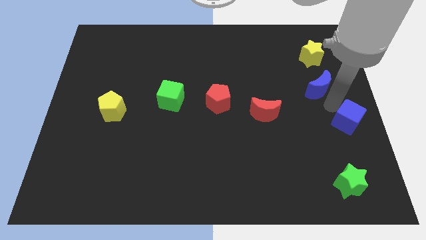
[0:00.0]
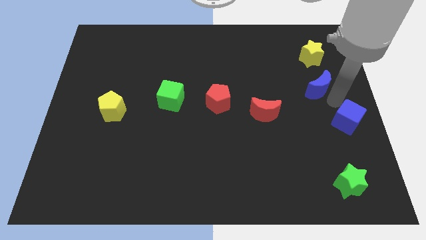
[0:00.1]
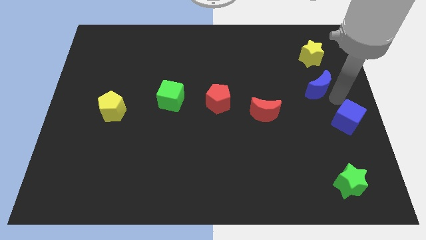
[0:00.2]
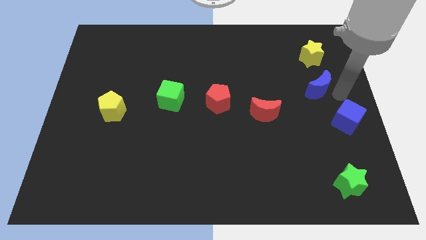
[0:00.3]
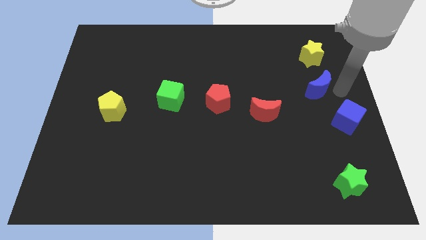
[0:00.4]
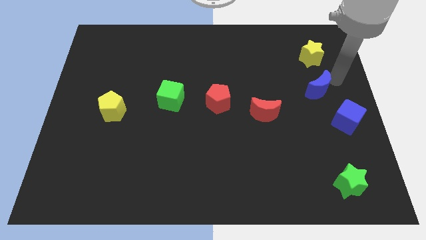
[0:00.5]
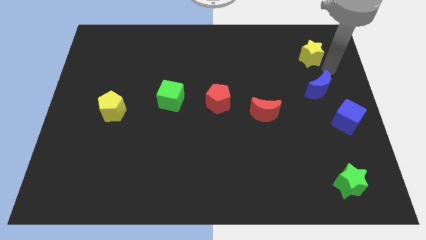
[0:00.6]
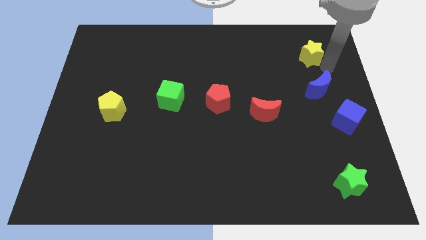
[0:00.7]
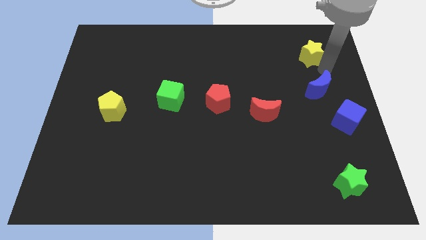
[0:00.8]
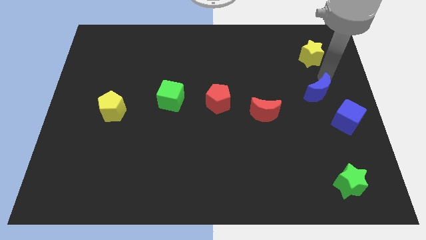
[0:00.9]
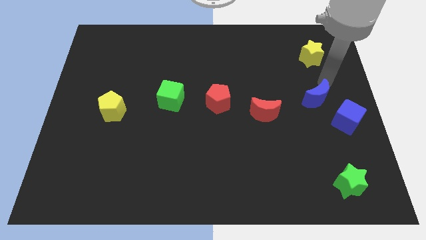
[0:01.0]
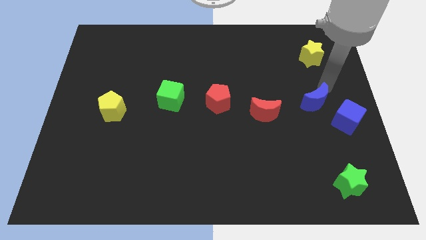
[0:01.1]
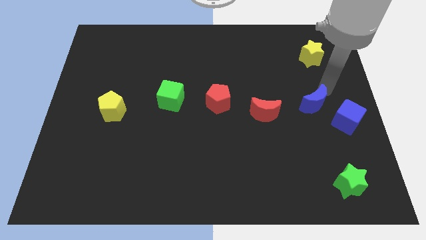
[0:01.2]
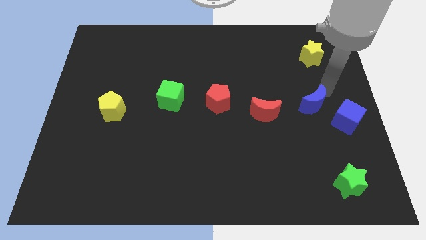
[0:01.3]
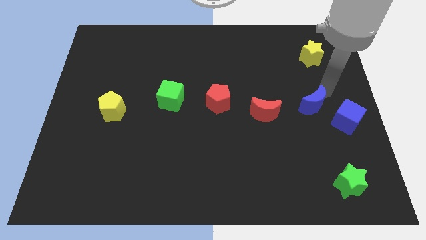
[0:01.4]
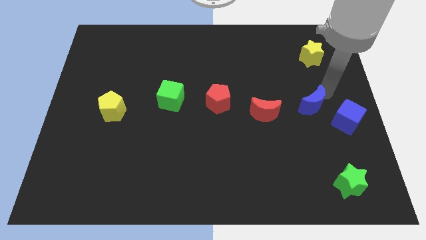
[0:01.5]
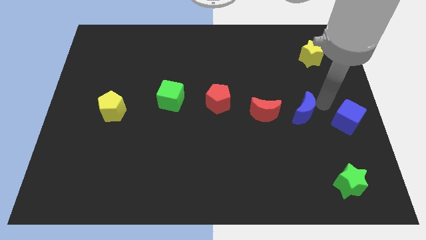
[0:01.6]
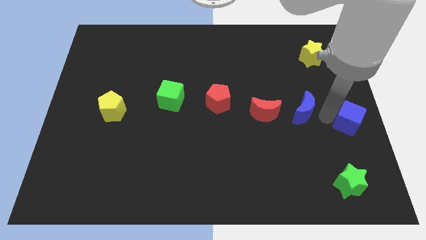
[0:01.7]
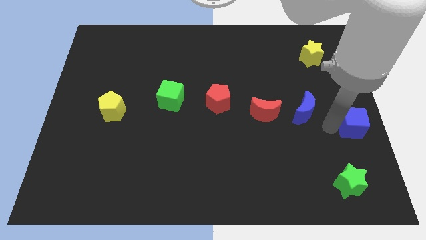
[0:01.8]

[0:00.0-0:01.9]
move the blue moon to the right of red moon

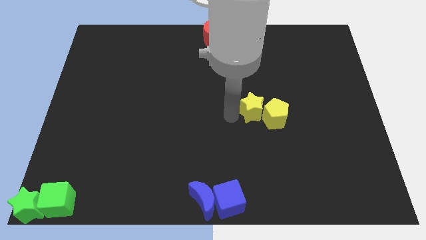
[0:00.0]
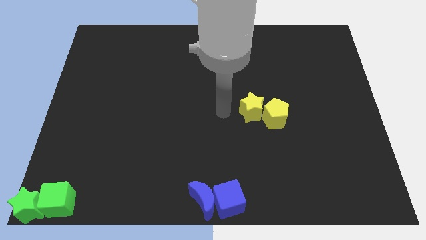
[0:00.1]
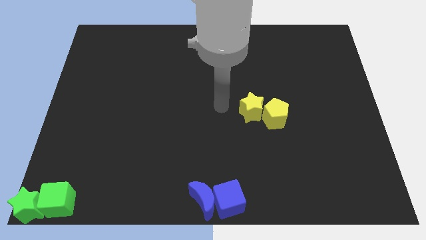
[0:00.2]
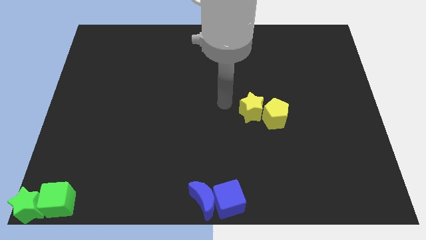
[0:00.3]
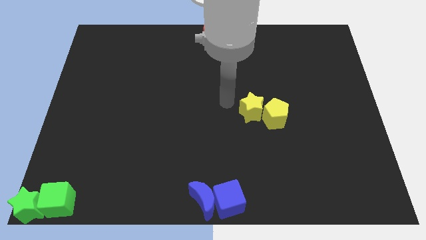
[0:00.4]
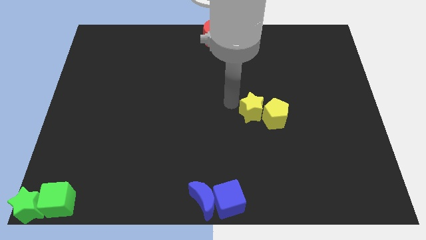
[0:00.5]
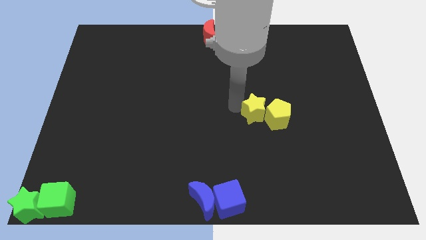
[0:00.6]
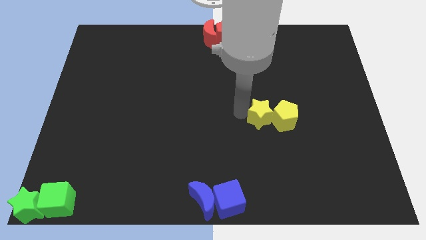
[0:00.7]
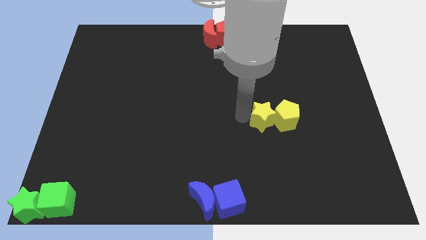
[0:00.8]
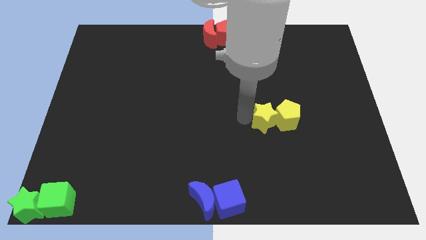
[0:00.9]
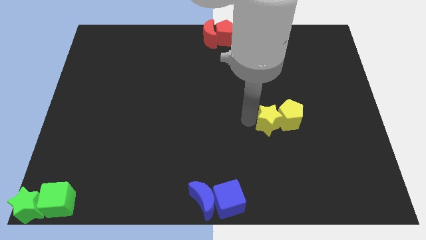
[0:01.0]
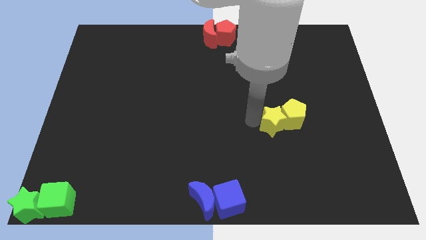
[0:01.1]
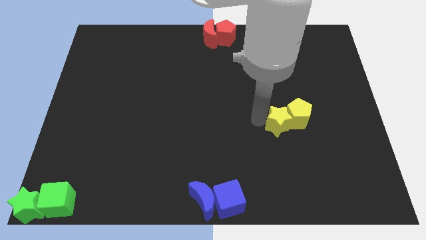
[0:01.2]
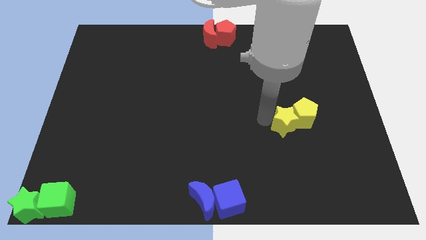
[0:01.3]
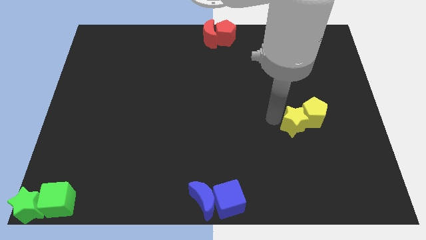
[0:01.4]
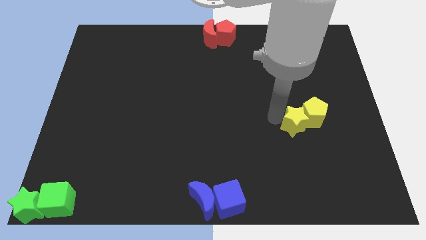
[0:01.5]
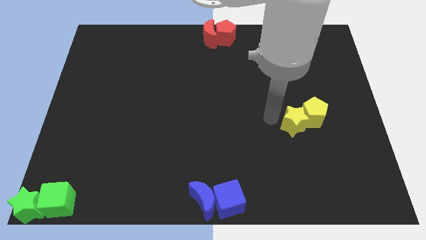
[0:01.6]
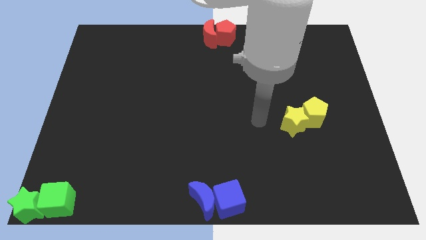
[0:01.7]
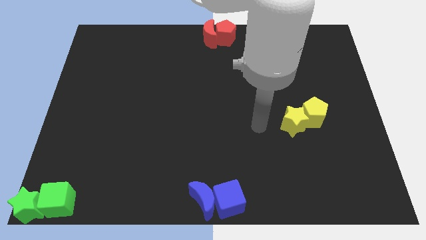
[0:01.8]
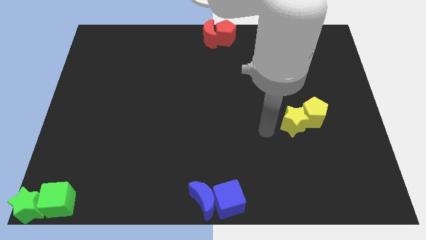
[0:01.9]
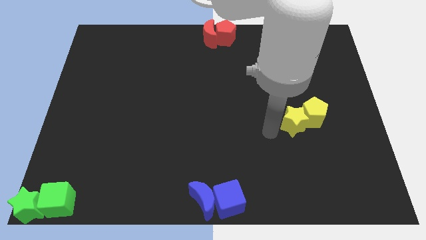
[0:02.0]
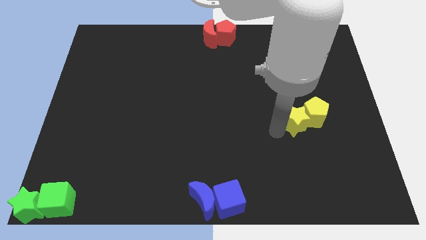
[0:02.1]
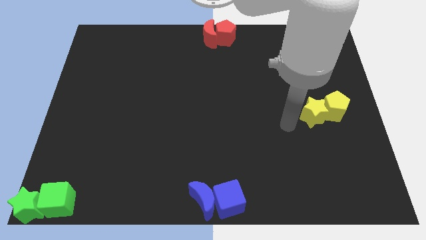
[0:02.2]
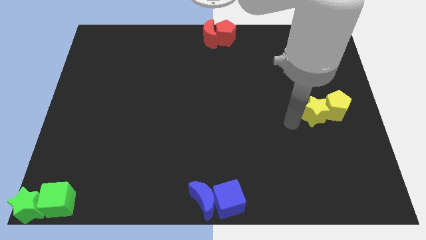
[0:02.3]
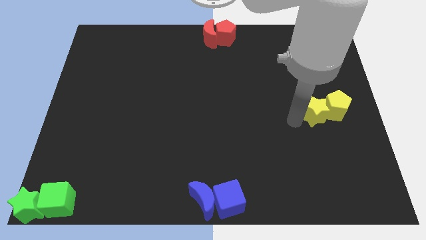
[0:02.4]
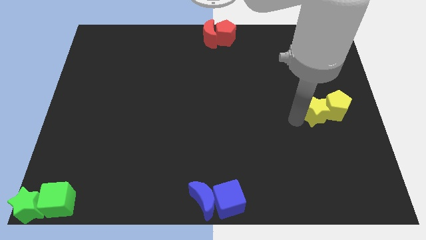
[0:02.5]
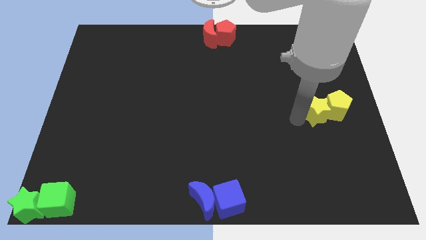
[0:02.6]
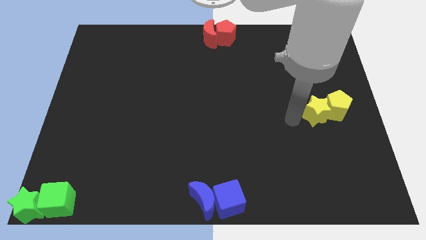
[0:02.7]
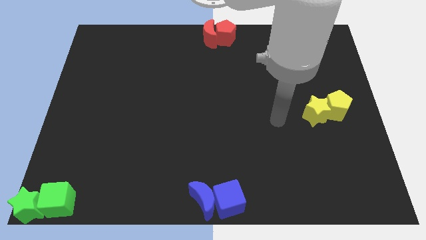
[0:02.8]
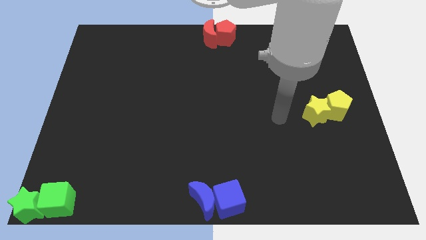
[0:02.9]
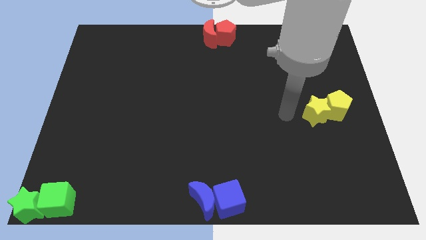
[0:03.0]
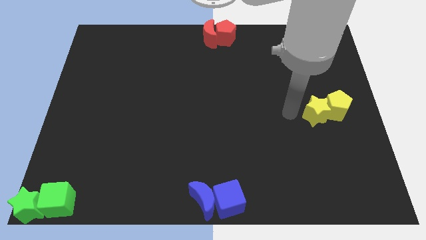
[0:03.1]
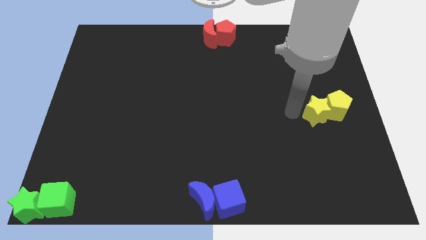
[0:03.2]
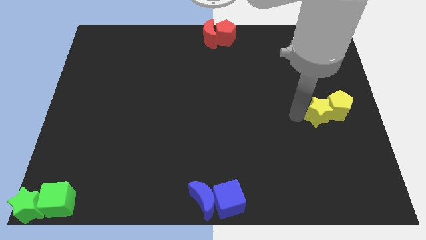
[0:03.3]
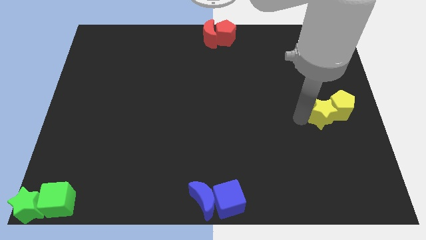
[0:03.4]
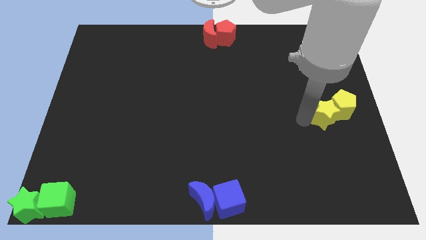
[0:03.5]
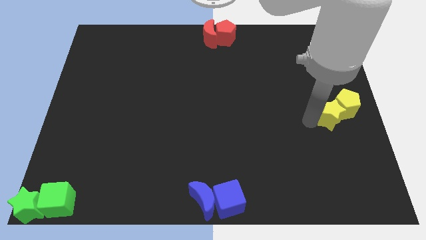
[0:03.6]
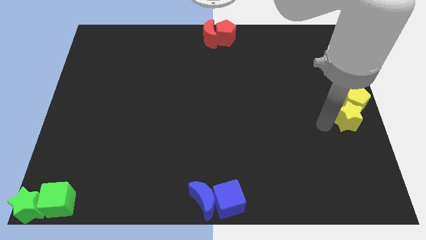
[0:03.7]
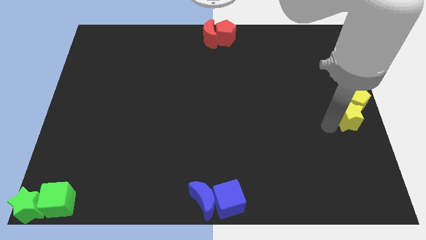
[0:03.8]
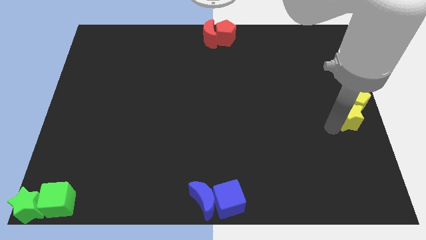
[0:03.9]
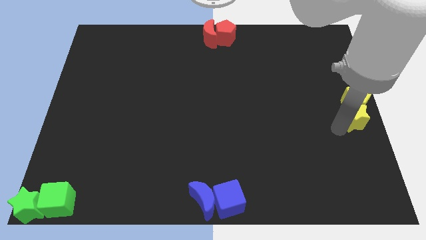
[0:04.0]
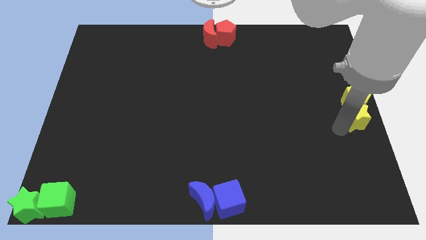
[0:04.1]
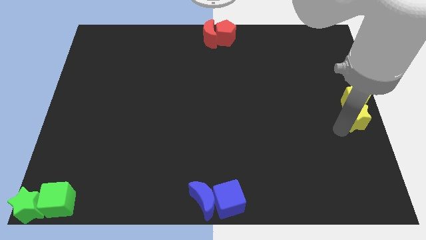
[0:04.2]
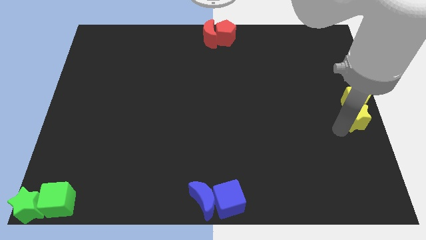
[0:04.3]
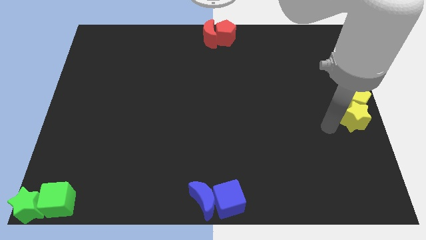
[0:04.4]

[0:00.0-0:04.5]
push the yellow star and yellow pentagon to the right centre of board

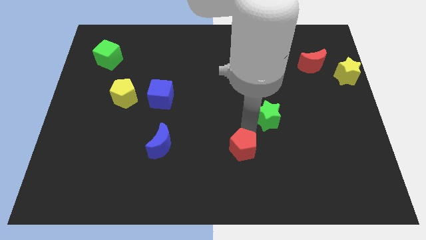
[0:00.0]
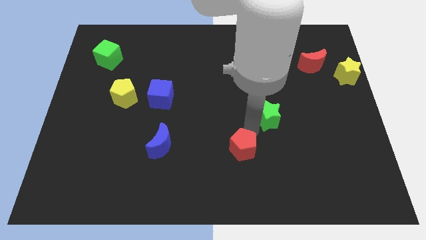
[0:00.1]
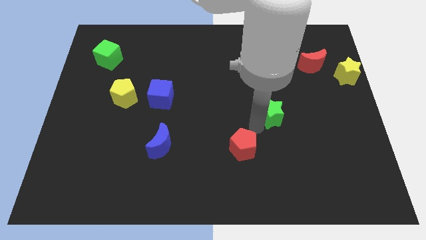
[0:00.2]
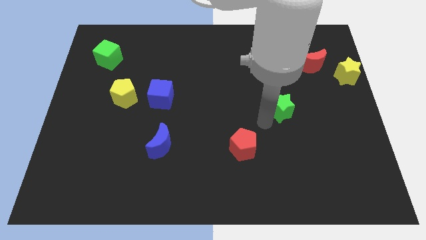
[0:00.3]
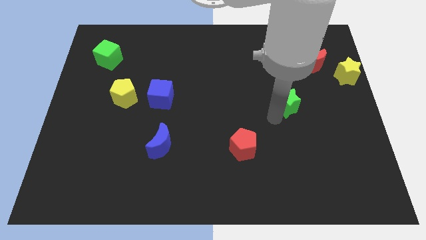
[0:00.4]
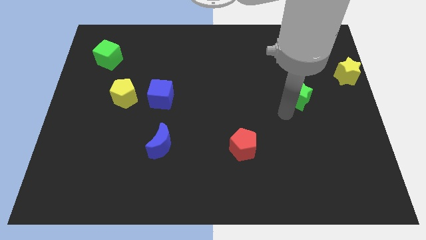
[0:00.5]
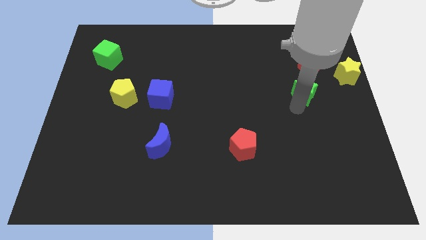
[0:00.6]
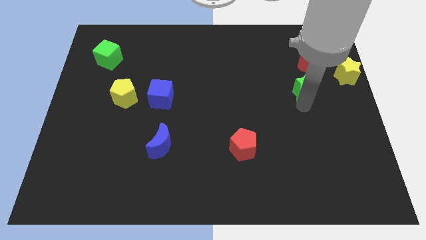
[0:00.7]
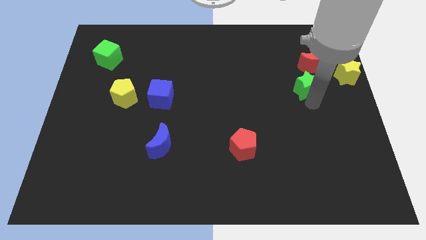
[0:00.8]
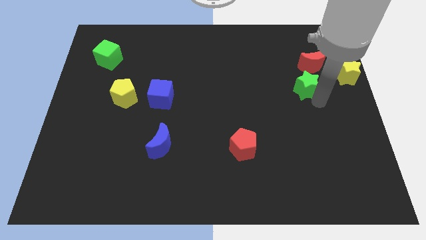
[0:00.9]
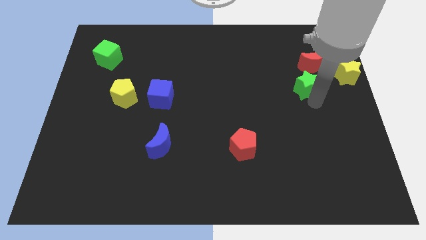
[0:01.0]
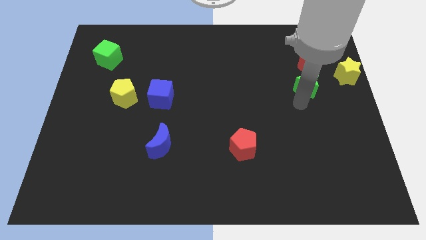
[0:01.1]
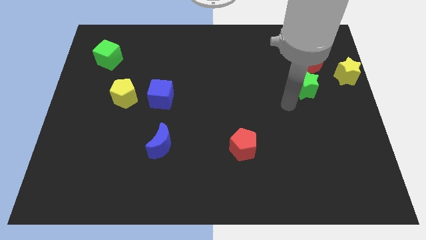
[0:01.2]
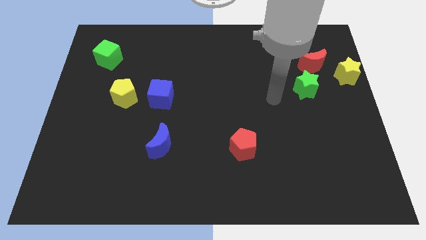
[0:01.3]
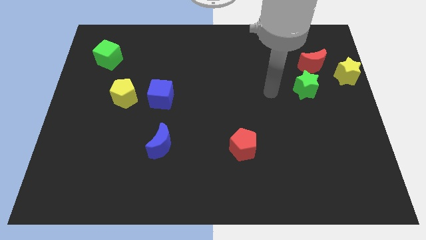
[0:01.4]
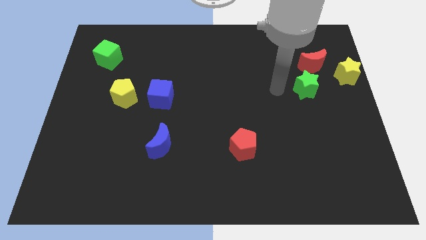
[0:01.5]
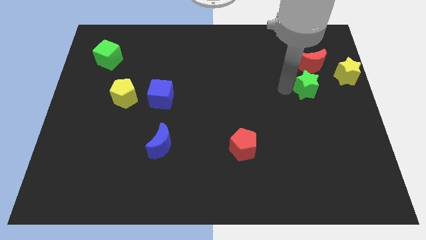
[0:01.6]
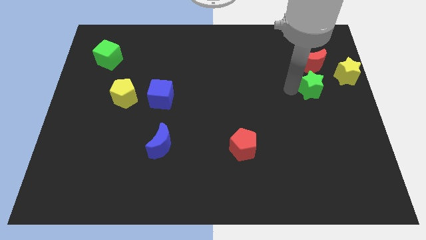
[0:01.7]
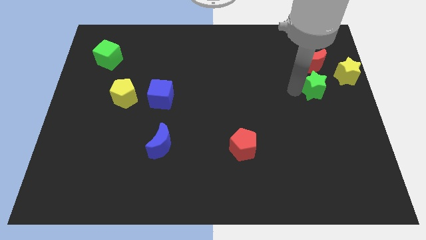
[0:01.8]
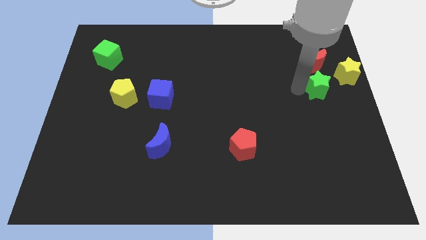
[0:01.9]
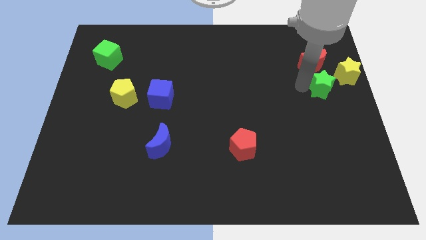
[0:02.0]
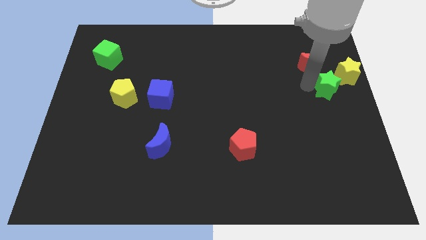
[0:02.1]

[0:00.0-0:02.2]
push green star towards yellow star

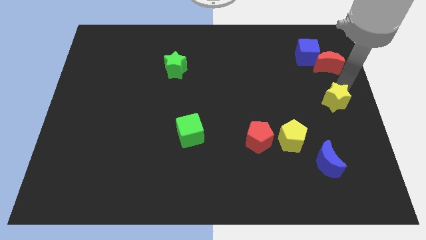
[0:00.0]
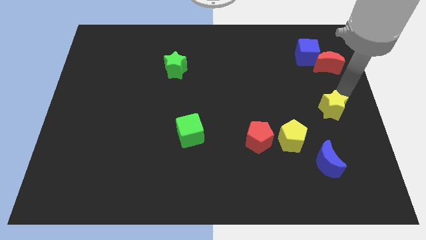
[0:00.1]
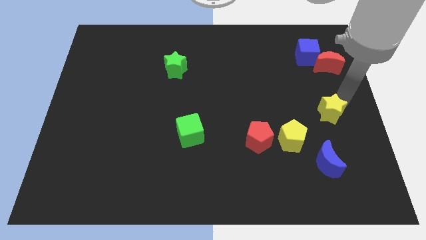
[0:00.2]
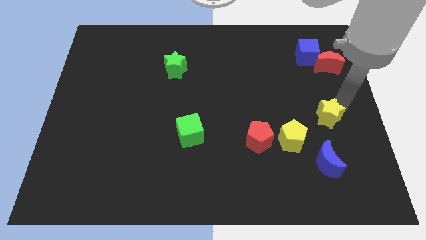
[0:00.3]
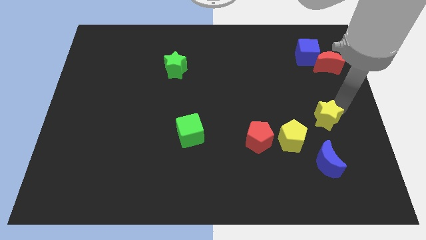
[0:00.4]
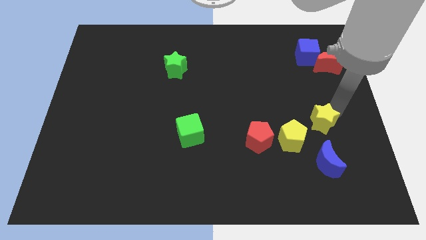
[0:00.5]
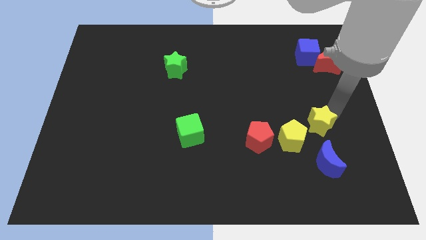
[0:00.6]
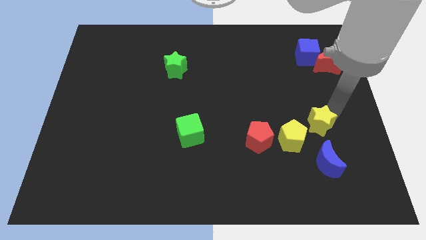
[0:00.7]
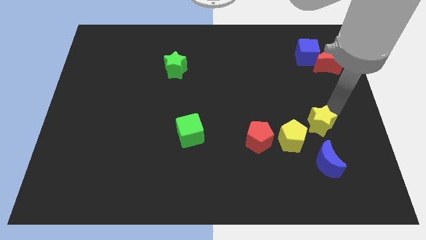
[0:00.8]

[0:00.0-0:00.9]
move the yellow star towards the yellow pentagon
